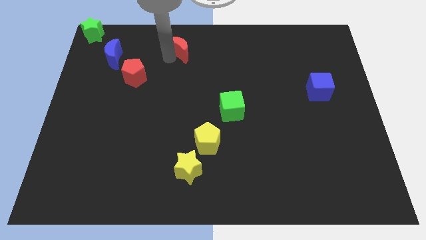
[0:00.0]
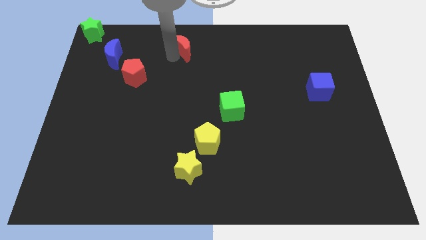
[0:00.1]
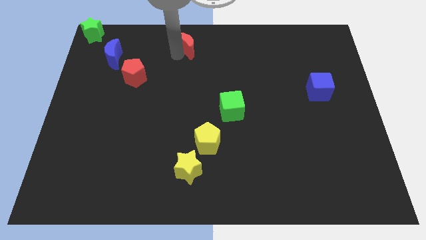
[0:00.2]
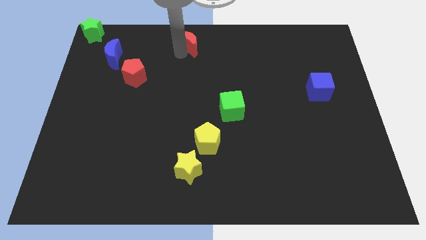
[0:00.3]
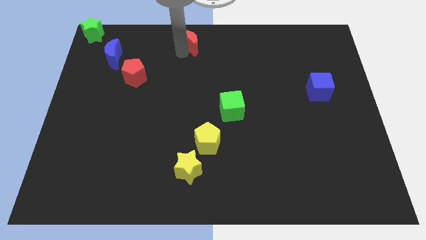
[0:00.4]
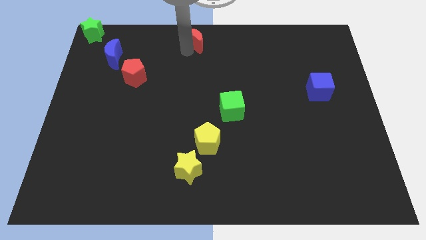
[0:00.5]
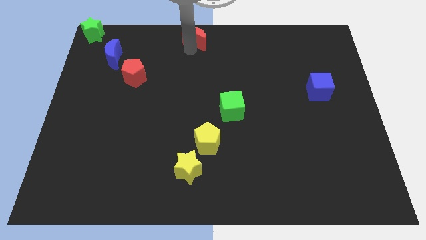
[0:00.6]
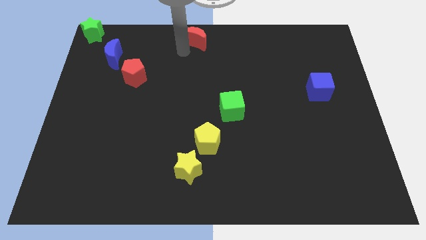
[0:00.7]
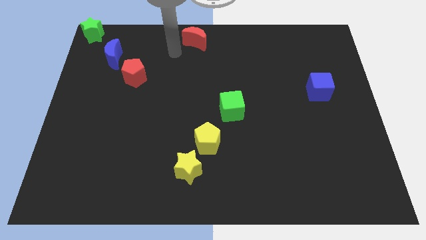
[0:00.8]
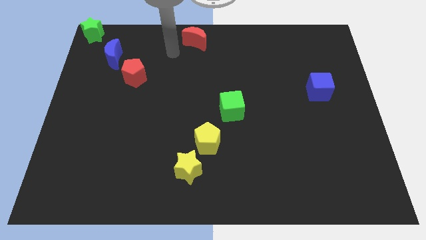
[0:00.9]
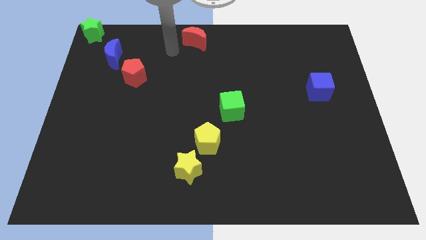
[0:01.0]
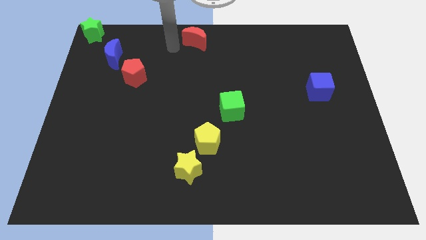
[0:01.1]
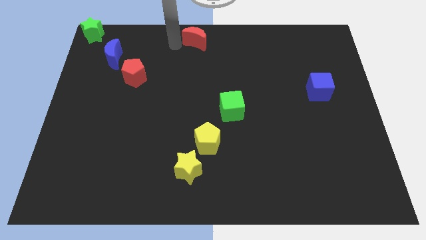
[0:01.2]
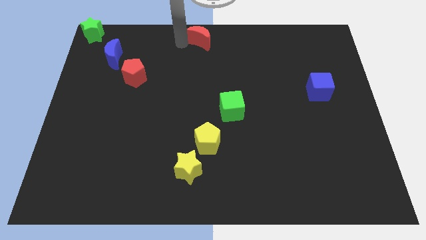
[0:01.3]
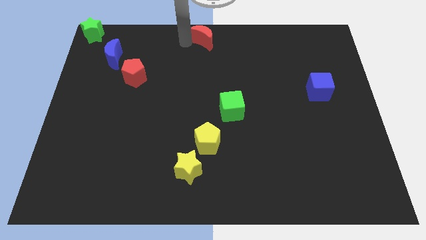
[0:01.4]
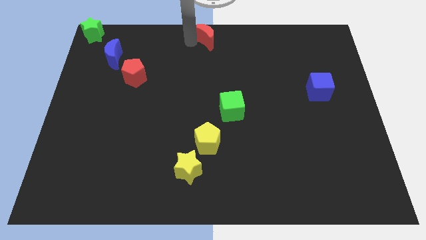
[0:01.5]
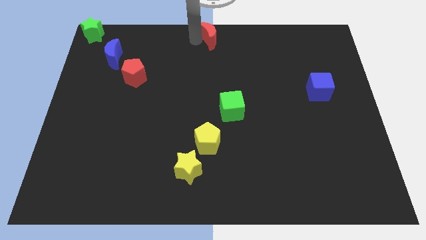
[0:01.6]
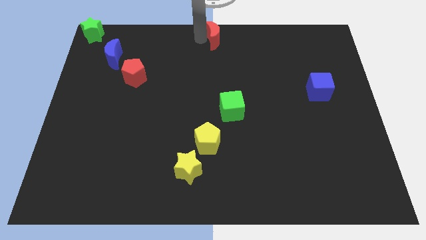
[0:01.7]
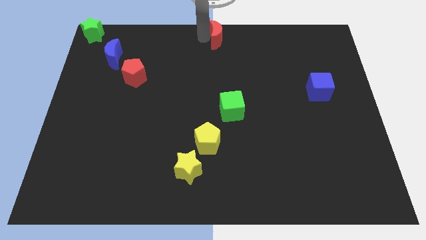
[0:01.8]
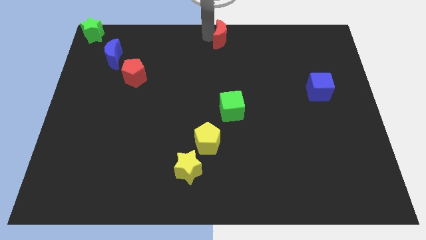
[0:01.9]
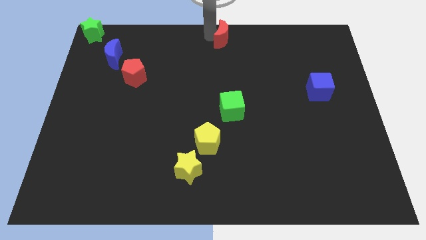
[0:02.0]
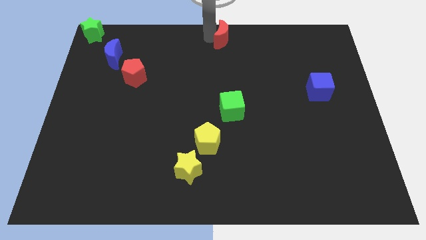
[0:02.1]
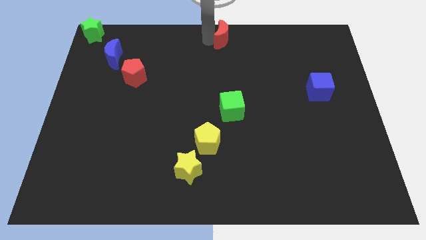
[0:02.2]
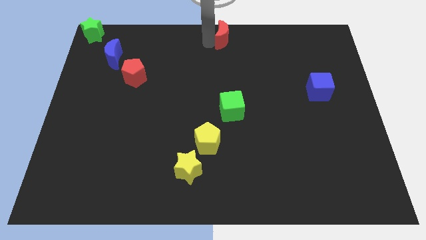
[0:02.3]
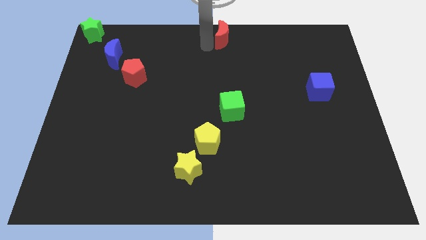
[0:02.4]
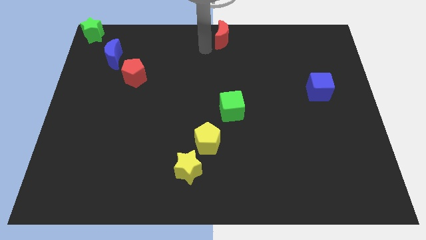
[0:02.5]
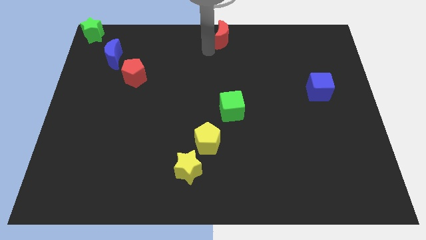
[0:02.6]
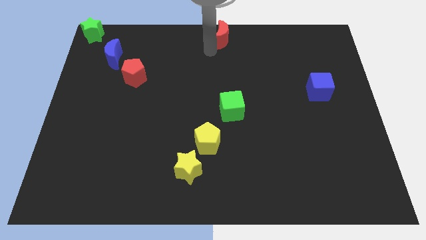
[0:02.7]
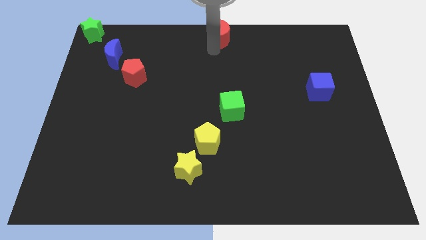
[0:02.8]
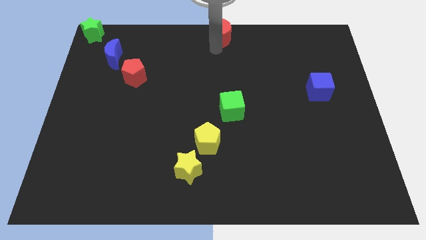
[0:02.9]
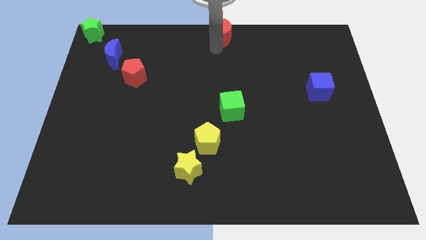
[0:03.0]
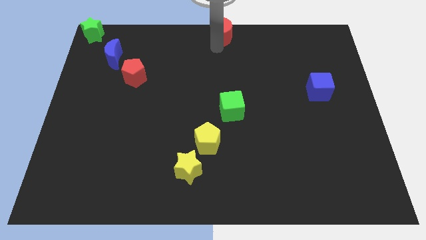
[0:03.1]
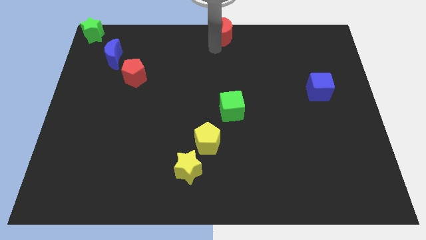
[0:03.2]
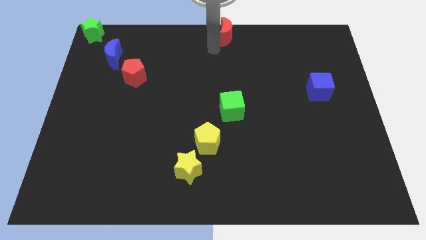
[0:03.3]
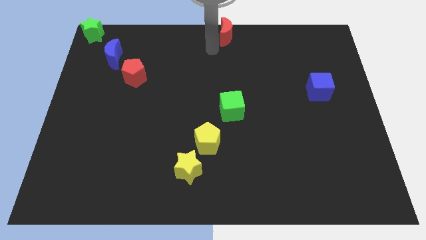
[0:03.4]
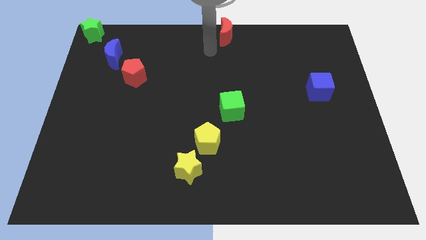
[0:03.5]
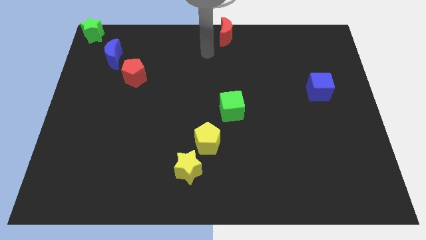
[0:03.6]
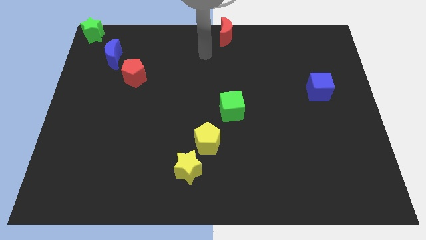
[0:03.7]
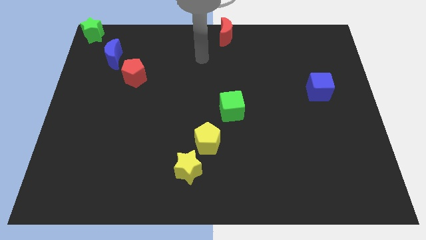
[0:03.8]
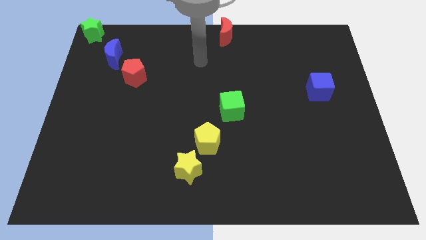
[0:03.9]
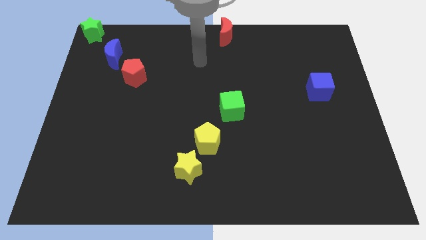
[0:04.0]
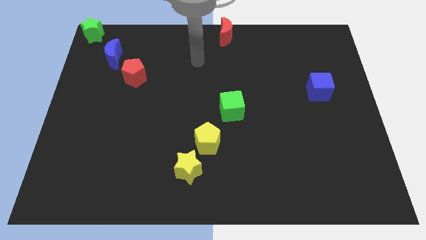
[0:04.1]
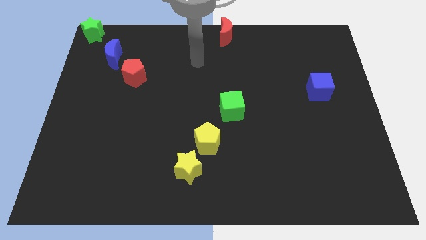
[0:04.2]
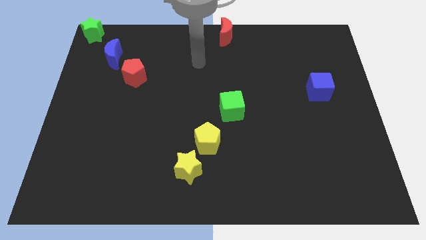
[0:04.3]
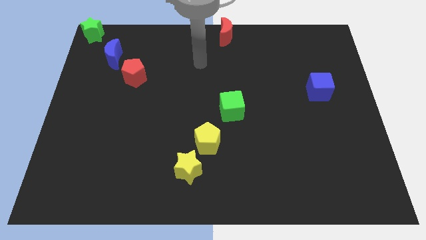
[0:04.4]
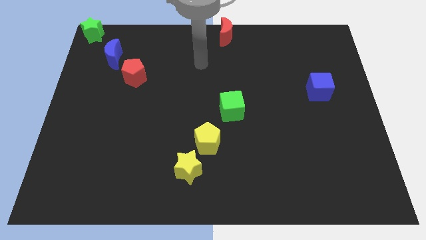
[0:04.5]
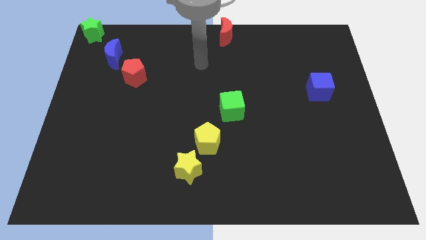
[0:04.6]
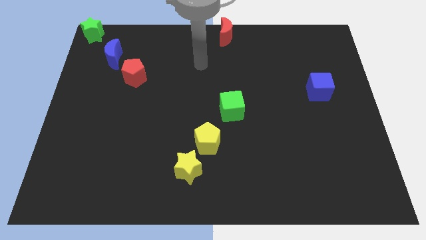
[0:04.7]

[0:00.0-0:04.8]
place red crescent at the top center of the board

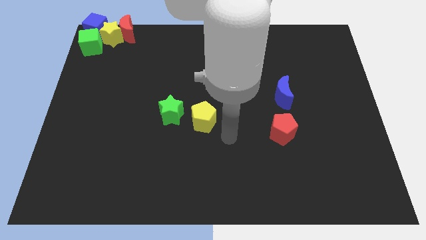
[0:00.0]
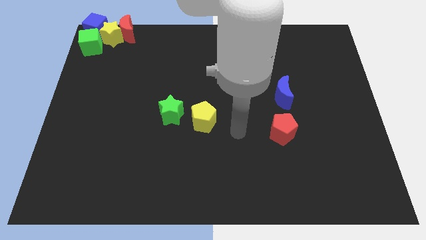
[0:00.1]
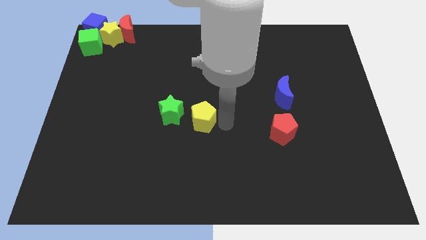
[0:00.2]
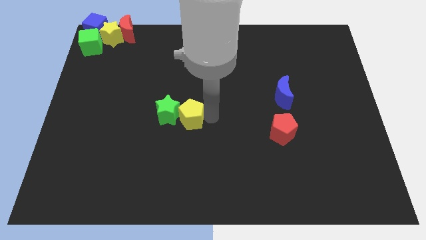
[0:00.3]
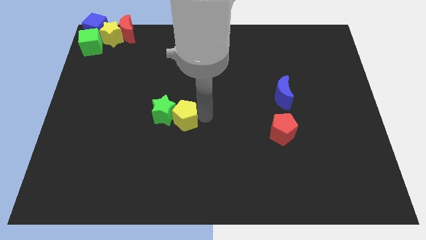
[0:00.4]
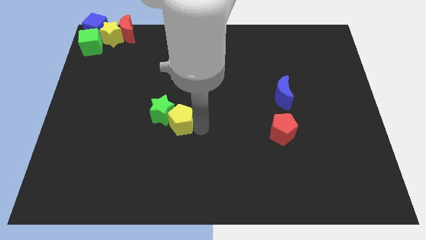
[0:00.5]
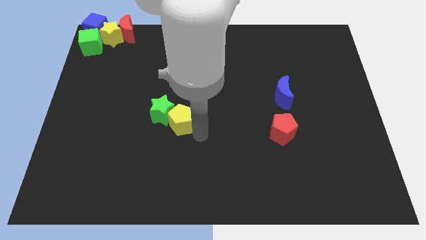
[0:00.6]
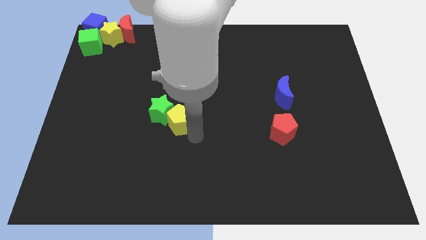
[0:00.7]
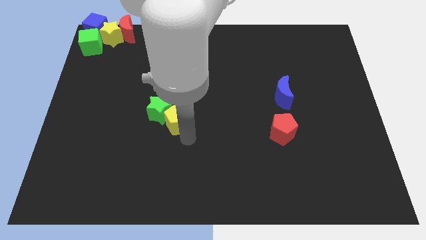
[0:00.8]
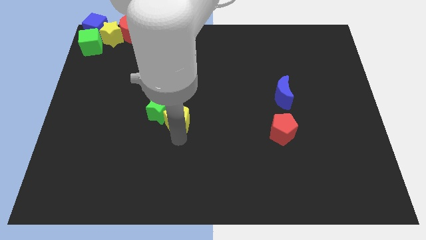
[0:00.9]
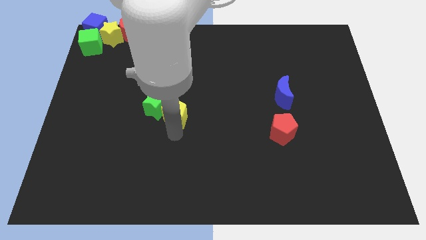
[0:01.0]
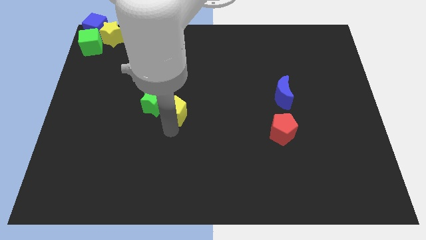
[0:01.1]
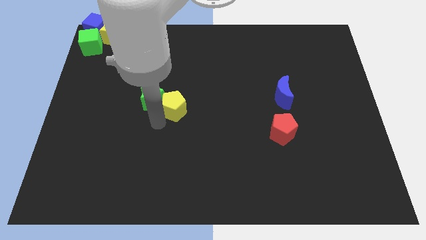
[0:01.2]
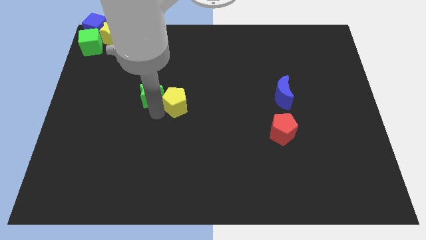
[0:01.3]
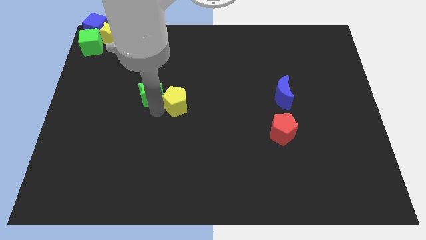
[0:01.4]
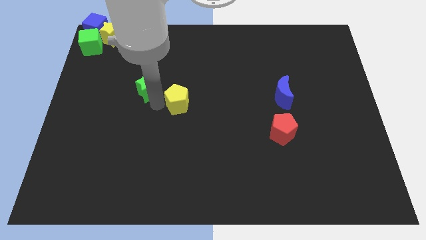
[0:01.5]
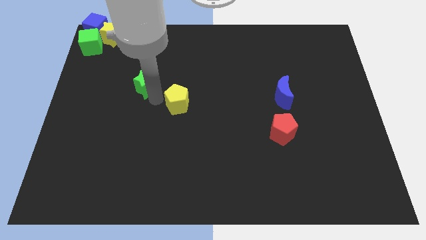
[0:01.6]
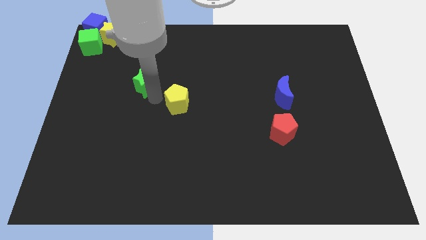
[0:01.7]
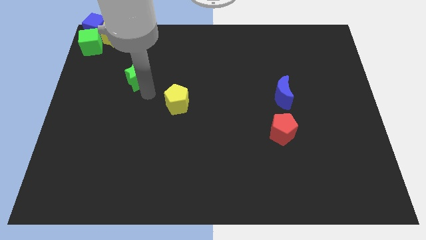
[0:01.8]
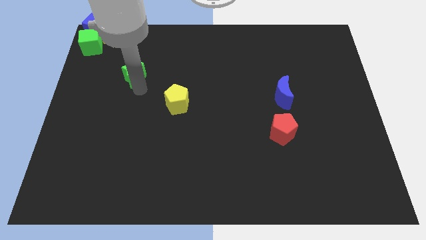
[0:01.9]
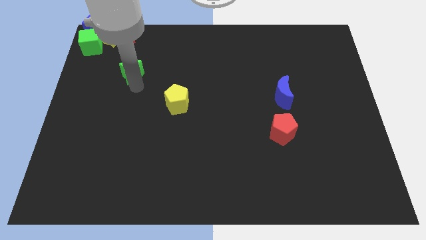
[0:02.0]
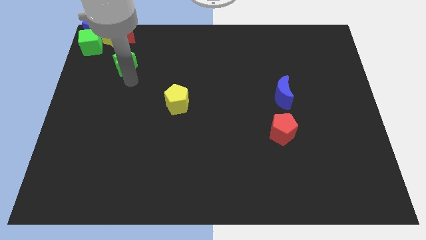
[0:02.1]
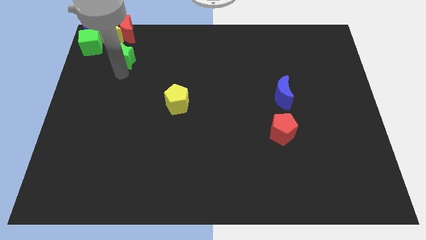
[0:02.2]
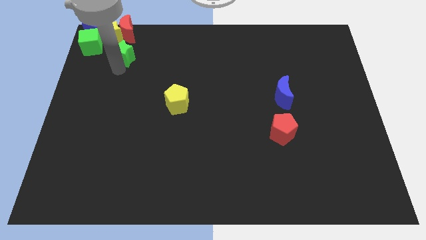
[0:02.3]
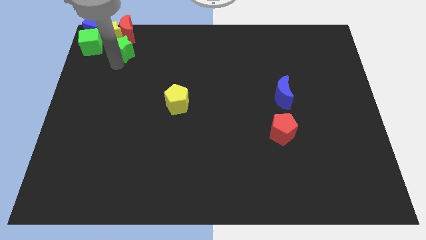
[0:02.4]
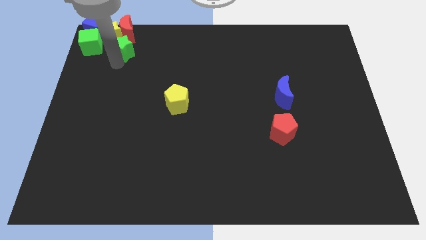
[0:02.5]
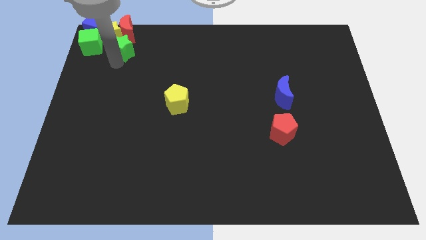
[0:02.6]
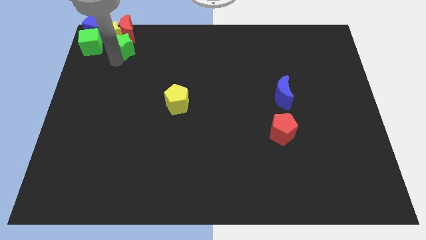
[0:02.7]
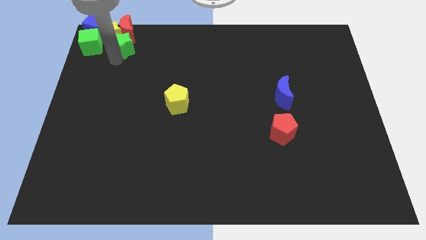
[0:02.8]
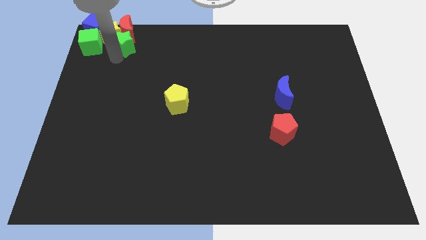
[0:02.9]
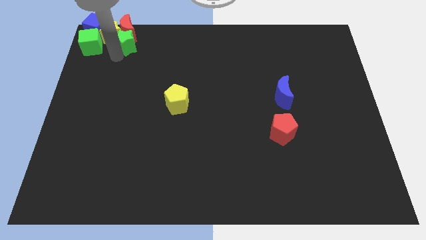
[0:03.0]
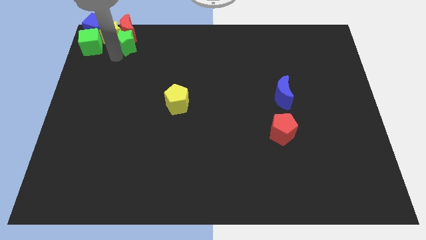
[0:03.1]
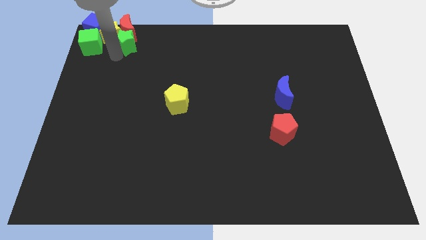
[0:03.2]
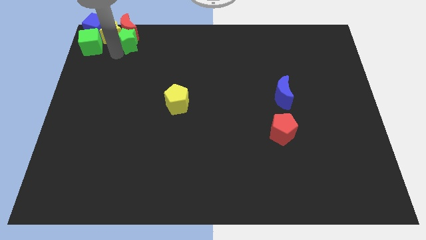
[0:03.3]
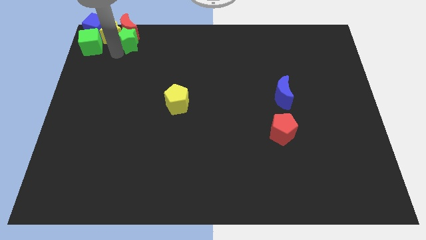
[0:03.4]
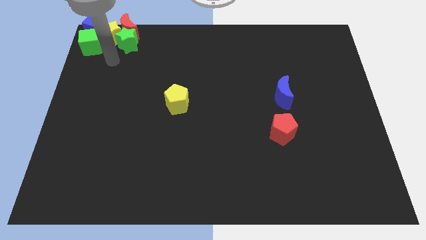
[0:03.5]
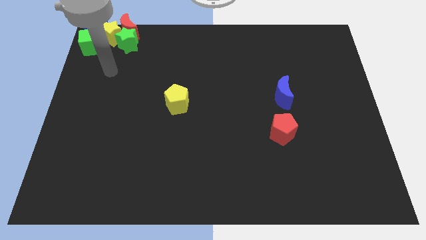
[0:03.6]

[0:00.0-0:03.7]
move the green star in between the red moon and yellow star

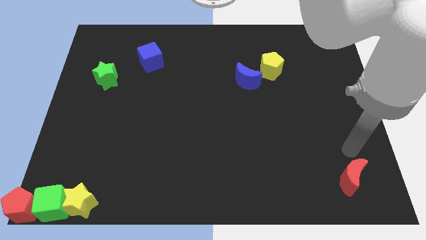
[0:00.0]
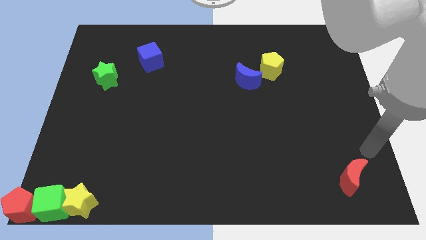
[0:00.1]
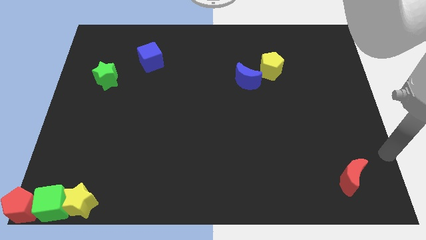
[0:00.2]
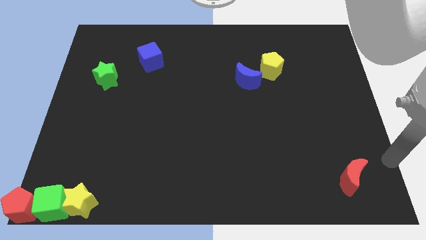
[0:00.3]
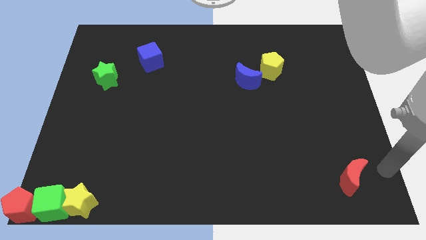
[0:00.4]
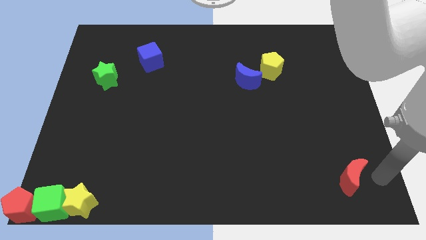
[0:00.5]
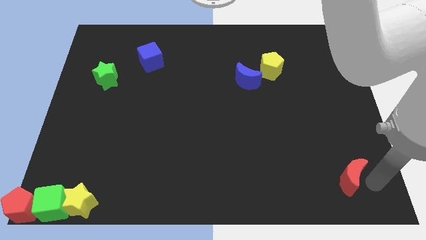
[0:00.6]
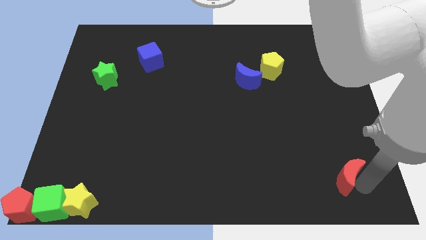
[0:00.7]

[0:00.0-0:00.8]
put your arm to the right side of red crescent
